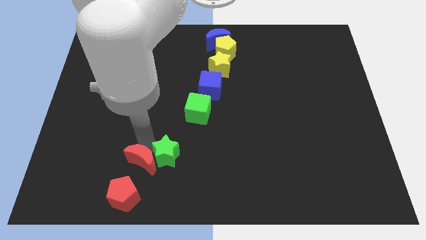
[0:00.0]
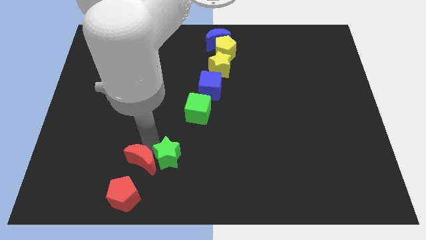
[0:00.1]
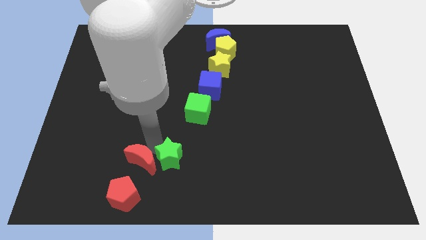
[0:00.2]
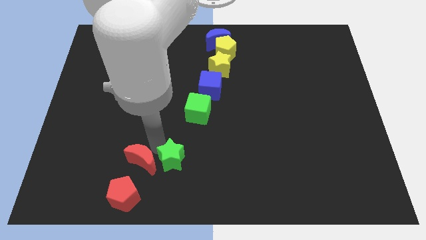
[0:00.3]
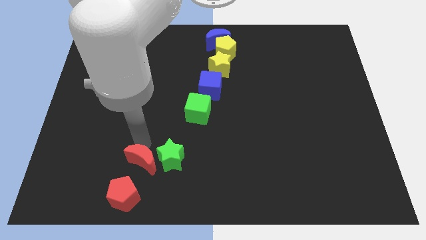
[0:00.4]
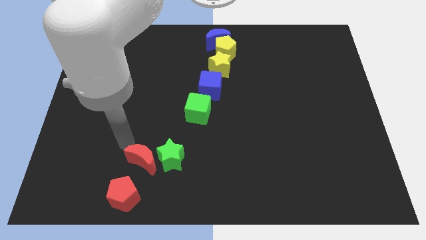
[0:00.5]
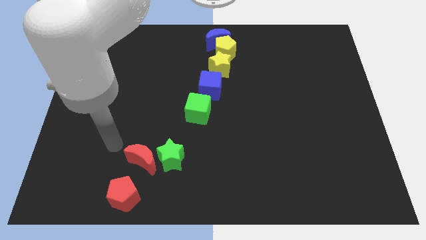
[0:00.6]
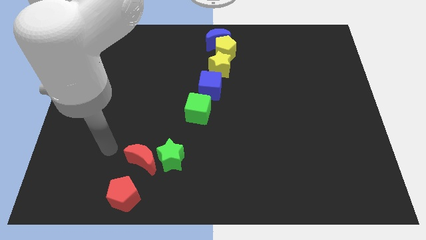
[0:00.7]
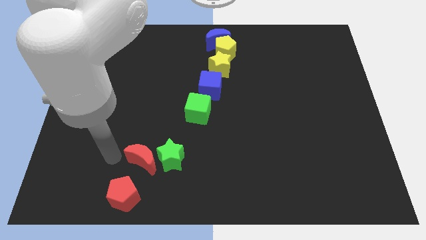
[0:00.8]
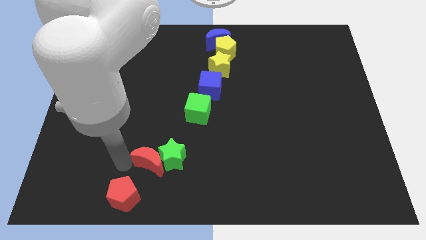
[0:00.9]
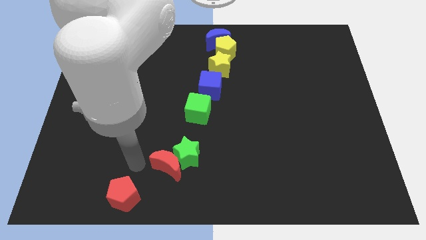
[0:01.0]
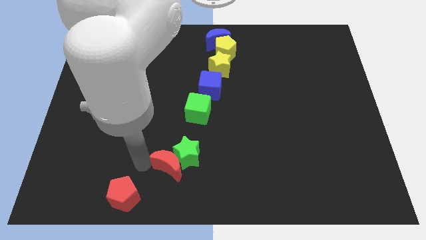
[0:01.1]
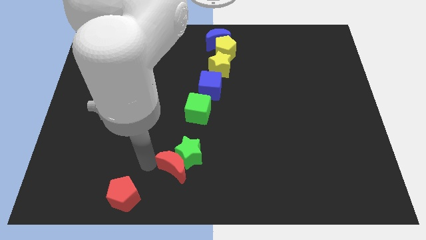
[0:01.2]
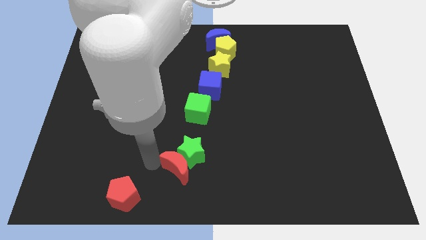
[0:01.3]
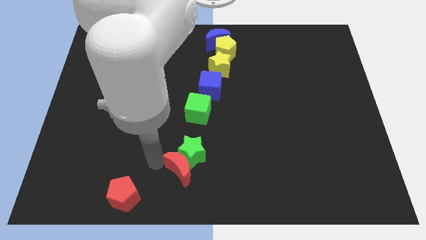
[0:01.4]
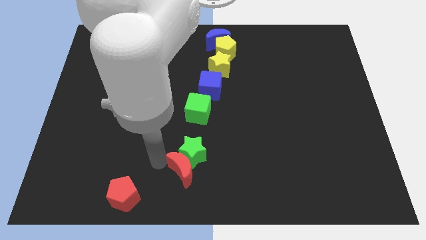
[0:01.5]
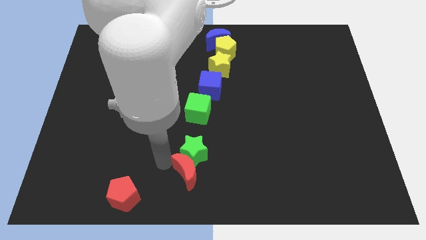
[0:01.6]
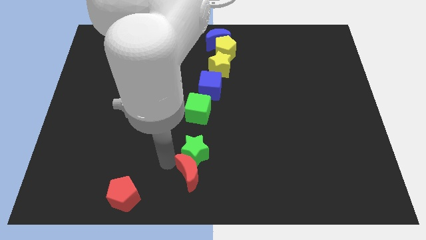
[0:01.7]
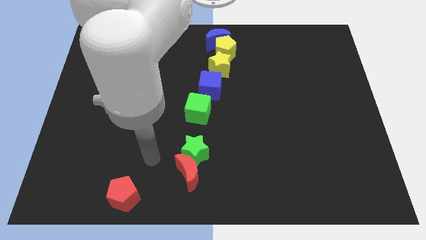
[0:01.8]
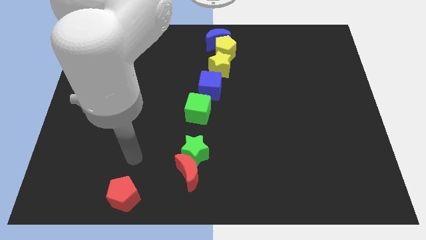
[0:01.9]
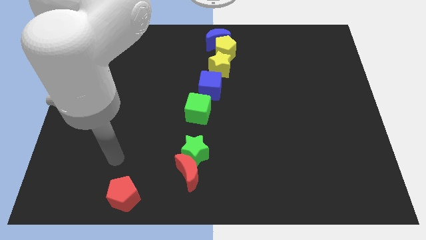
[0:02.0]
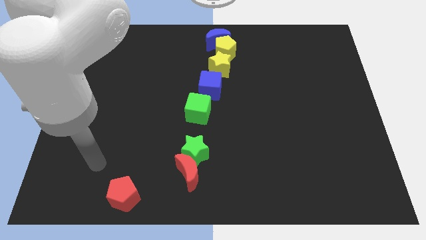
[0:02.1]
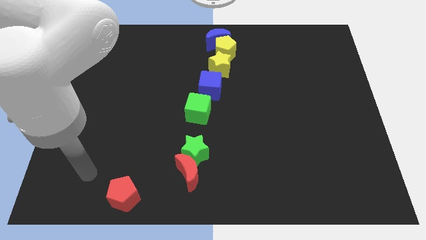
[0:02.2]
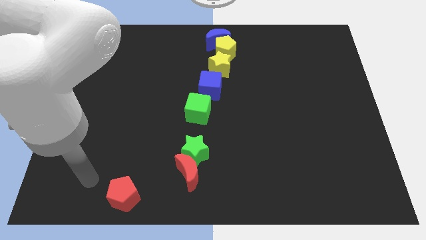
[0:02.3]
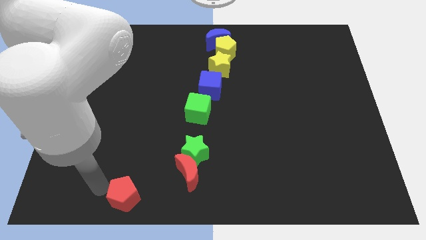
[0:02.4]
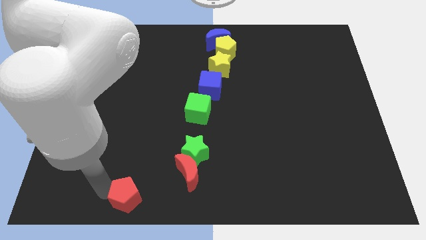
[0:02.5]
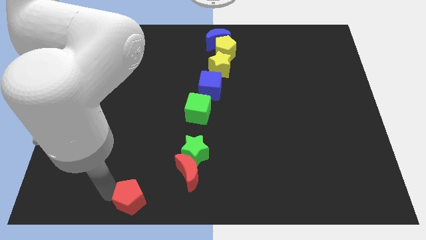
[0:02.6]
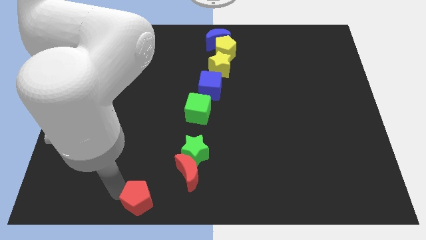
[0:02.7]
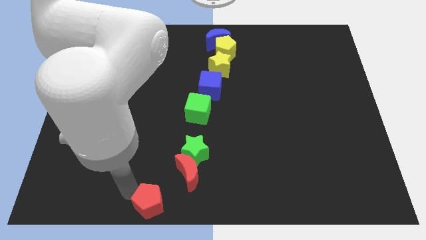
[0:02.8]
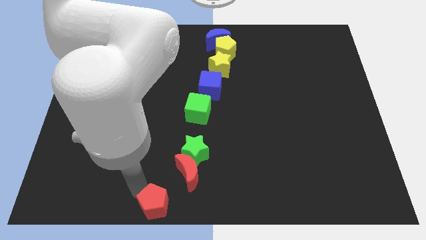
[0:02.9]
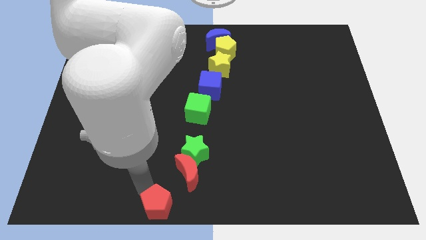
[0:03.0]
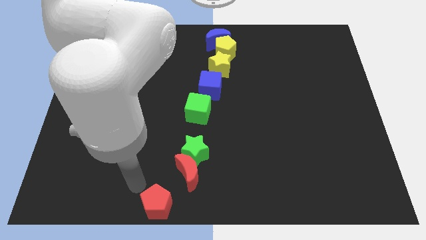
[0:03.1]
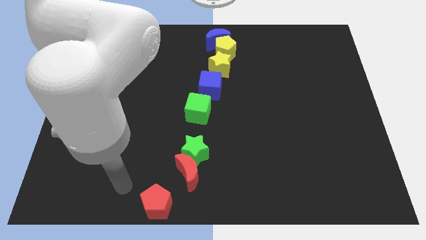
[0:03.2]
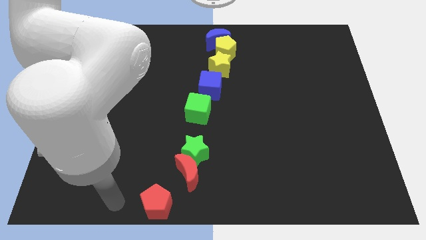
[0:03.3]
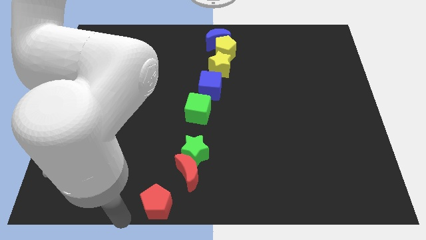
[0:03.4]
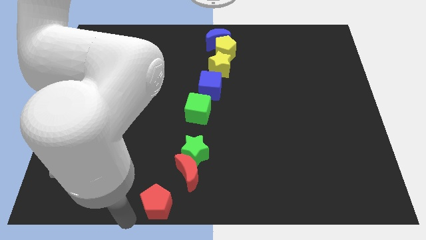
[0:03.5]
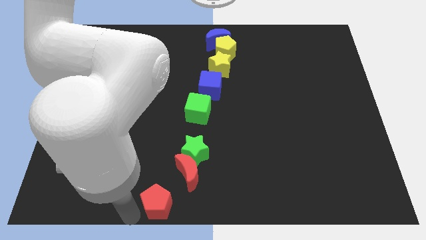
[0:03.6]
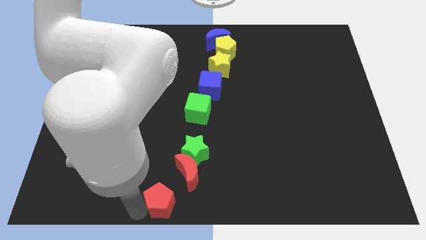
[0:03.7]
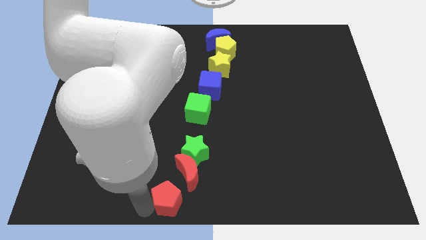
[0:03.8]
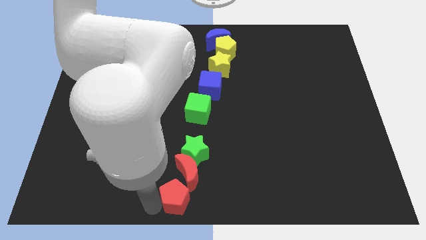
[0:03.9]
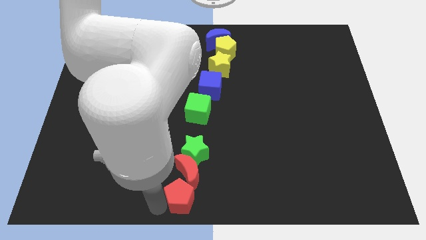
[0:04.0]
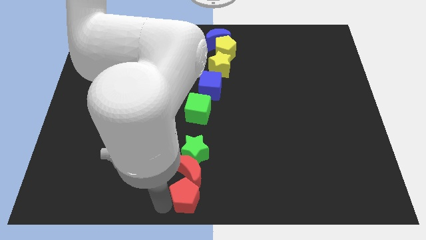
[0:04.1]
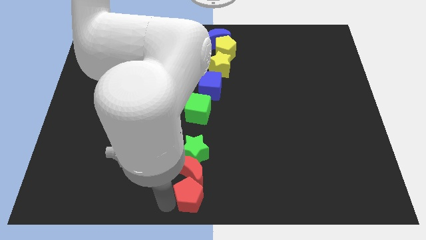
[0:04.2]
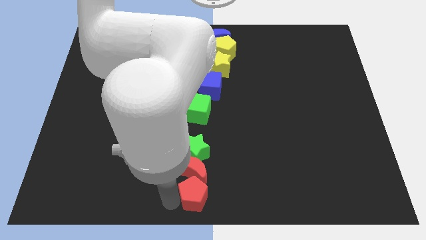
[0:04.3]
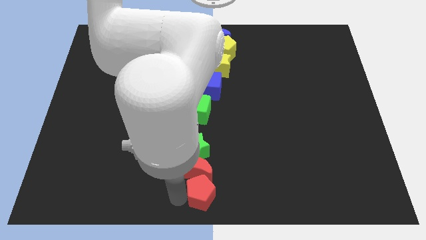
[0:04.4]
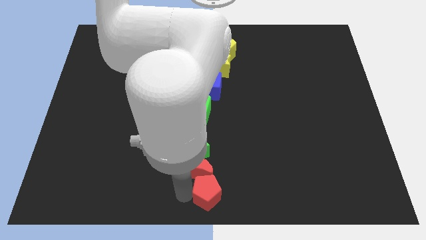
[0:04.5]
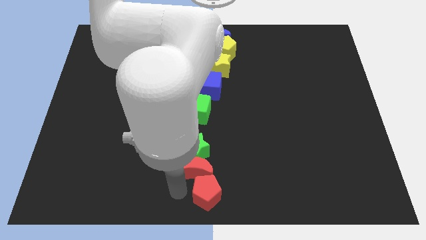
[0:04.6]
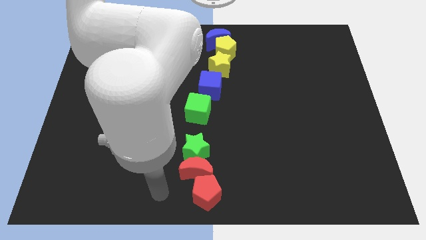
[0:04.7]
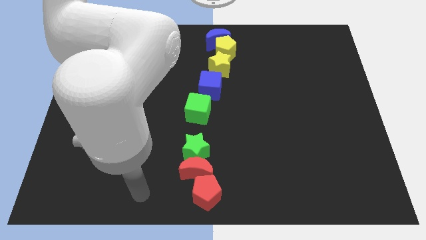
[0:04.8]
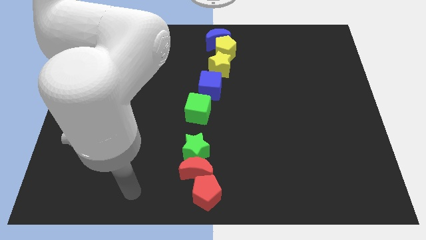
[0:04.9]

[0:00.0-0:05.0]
with green star red moon red pentagon make vertical line

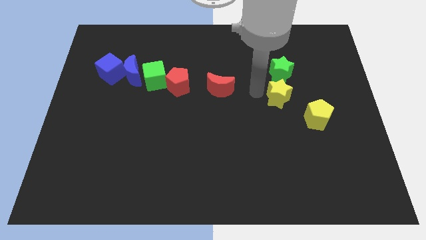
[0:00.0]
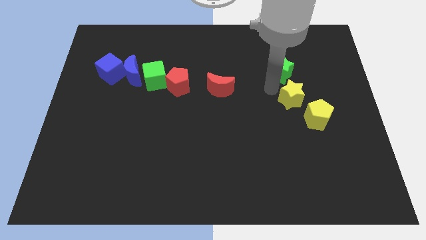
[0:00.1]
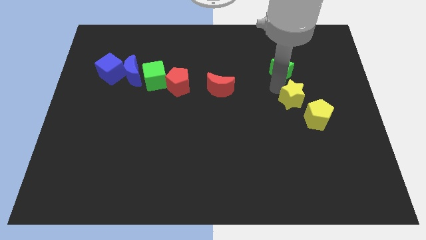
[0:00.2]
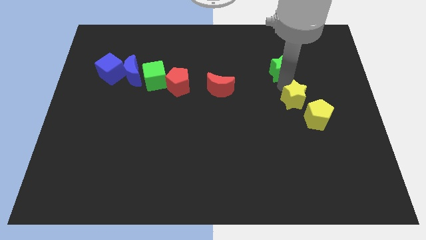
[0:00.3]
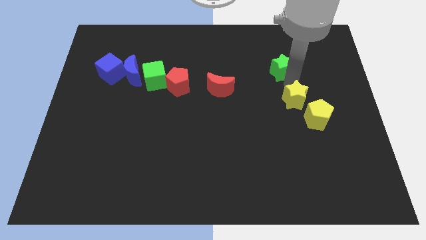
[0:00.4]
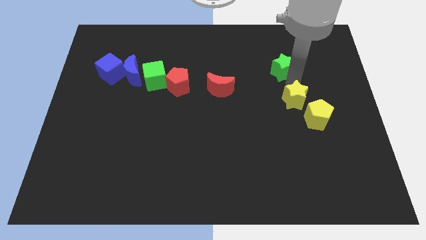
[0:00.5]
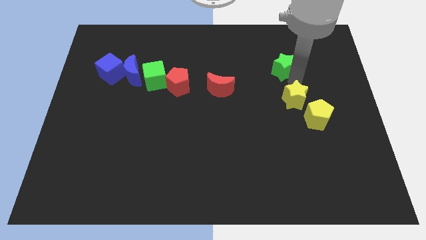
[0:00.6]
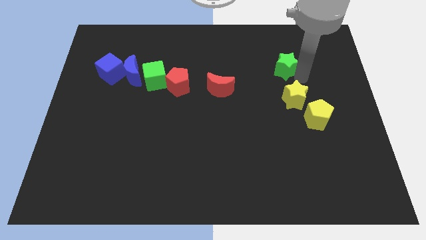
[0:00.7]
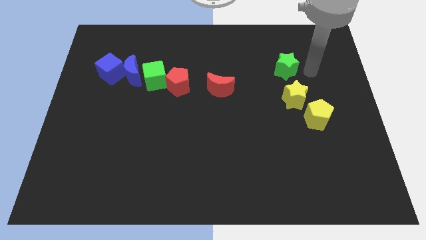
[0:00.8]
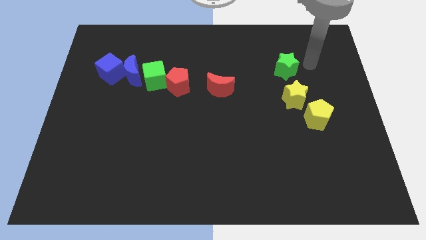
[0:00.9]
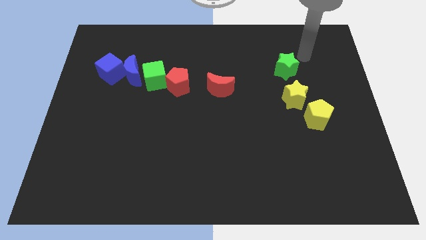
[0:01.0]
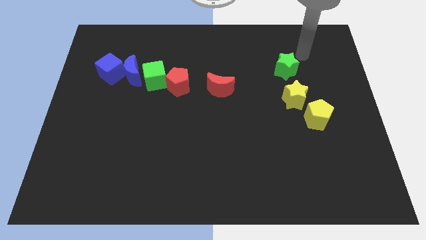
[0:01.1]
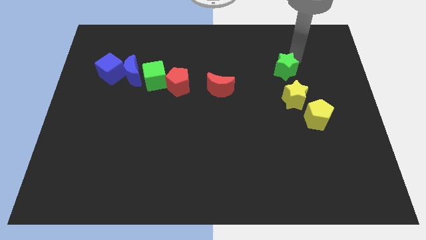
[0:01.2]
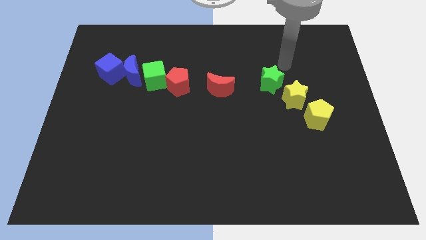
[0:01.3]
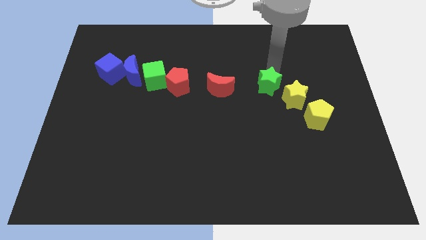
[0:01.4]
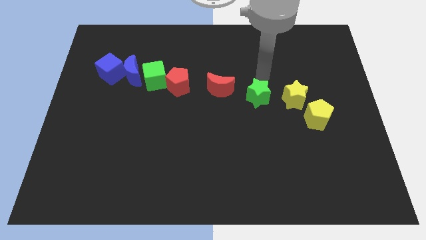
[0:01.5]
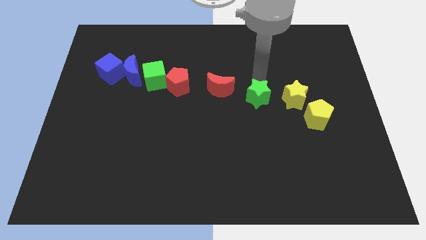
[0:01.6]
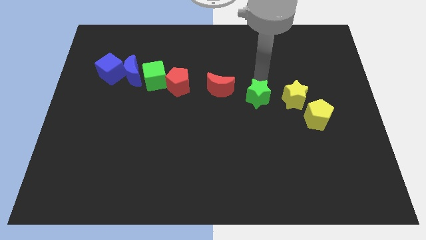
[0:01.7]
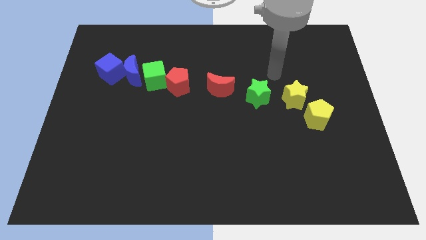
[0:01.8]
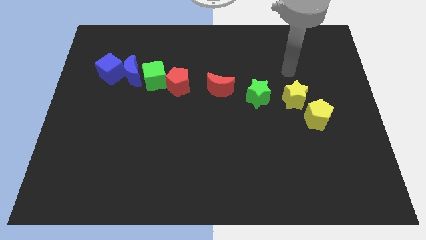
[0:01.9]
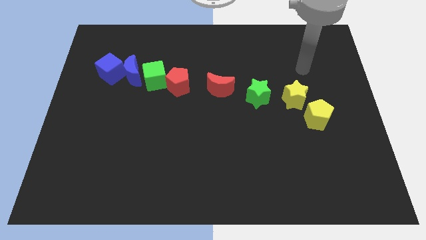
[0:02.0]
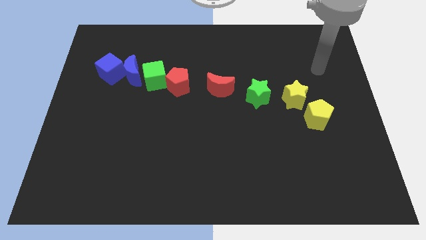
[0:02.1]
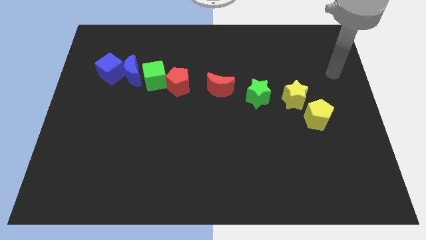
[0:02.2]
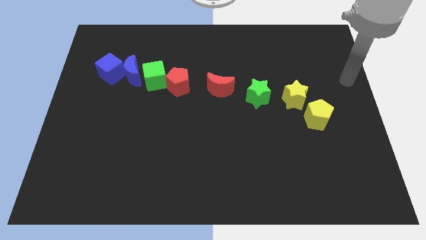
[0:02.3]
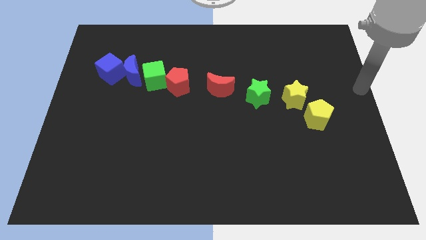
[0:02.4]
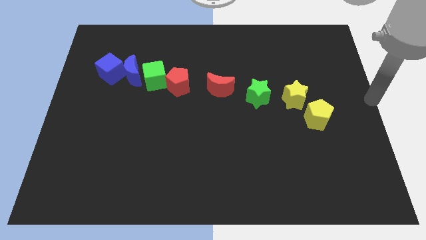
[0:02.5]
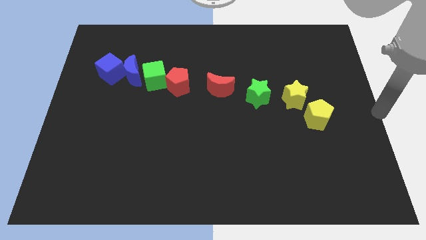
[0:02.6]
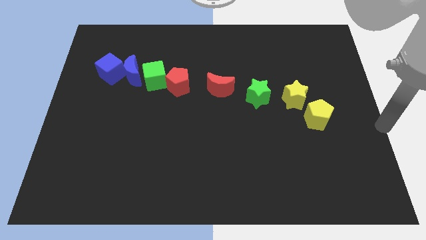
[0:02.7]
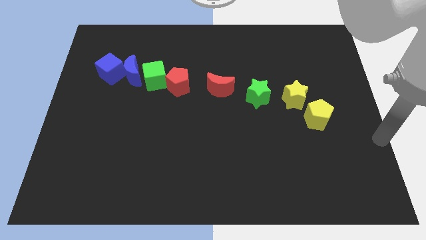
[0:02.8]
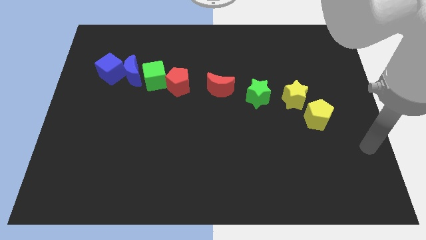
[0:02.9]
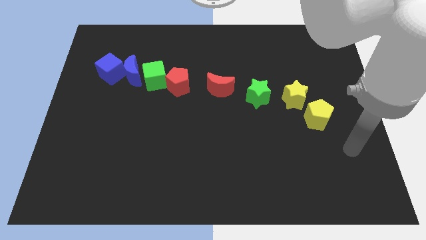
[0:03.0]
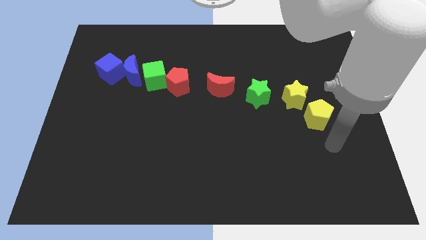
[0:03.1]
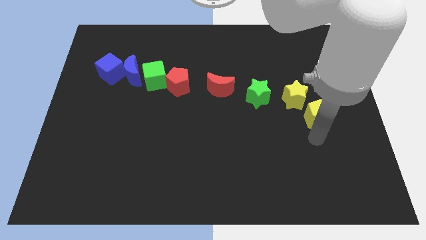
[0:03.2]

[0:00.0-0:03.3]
place the green star in between the red crescent and yellow star

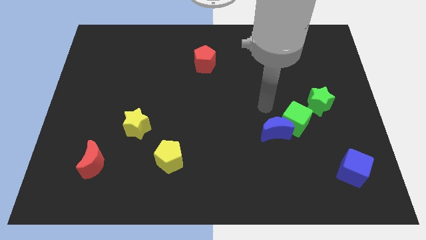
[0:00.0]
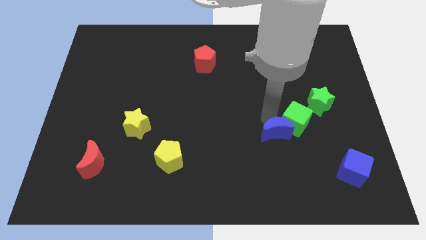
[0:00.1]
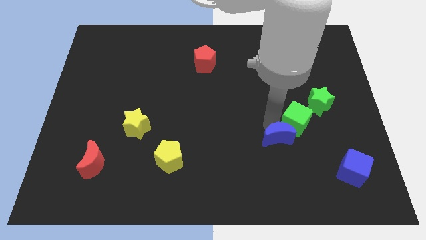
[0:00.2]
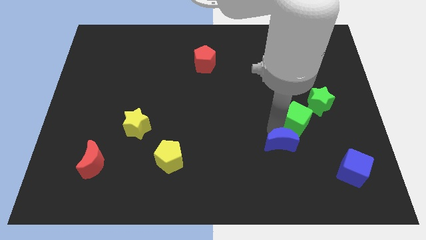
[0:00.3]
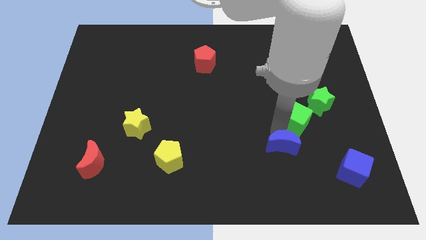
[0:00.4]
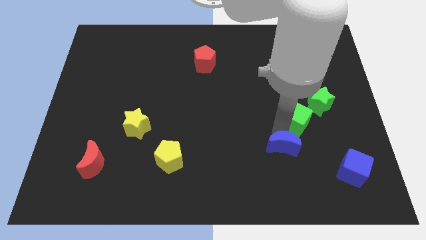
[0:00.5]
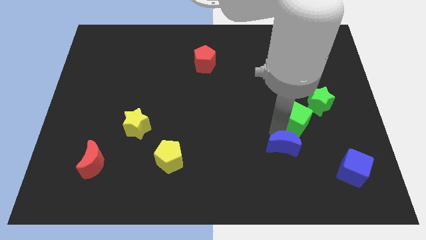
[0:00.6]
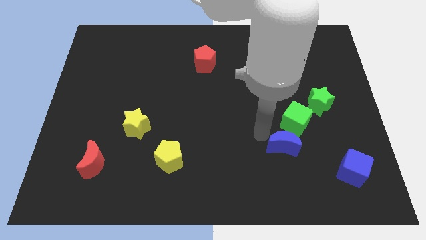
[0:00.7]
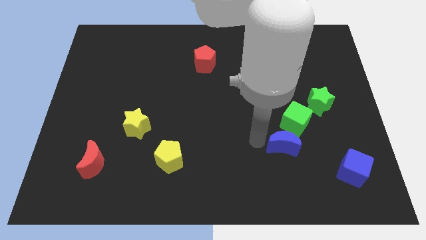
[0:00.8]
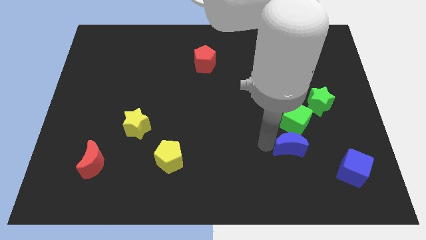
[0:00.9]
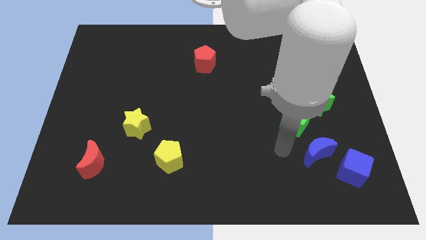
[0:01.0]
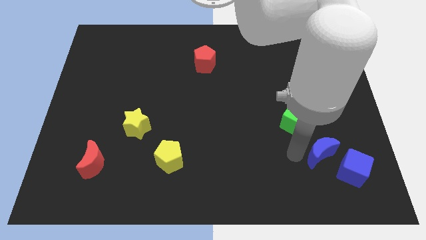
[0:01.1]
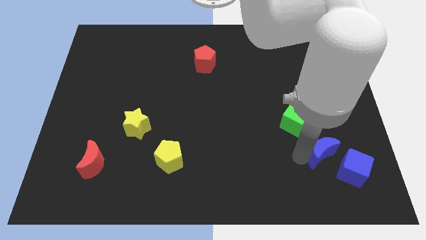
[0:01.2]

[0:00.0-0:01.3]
push the blue moon between the green cube and blue cube
